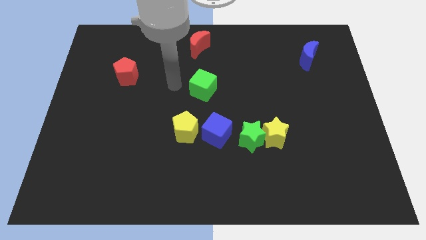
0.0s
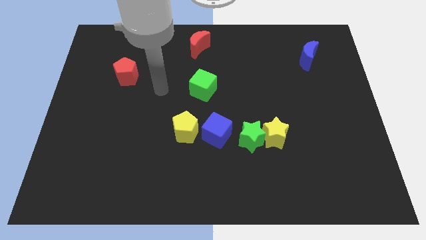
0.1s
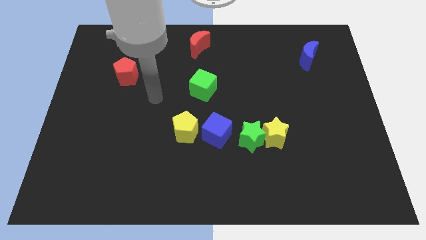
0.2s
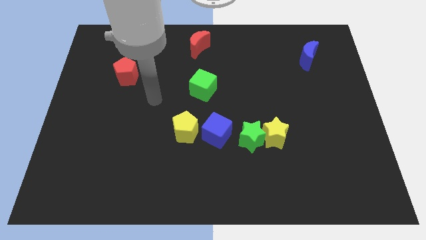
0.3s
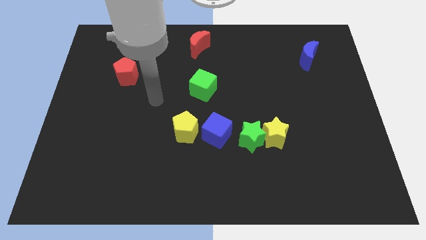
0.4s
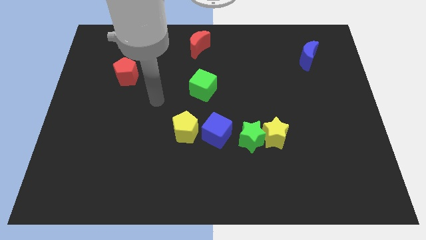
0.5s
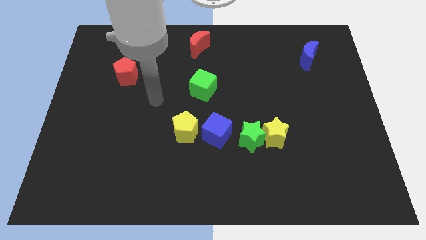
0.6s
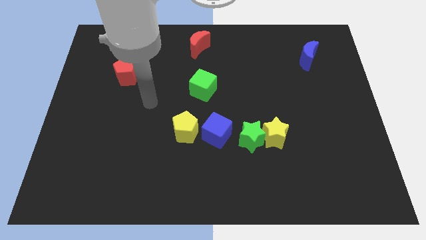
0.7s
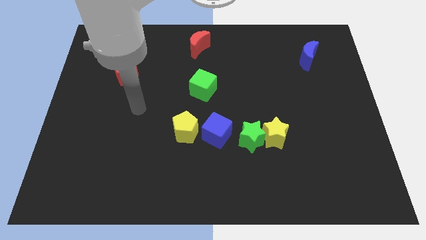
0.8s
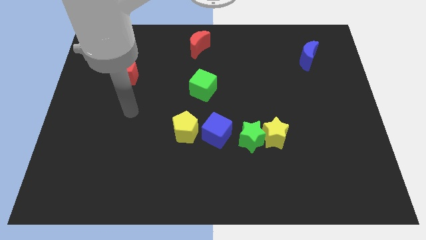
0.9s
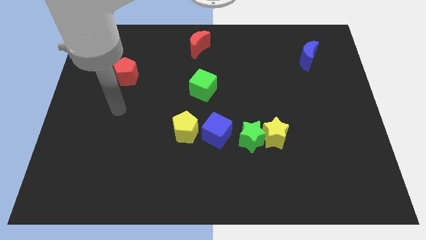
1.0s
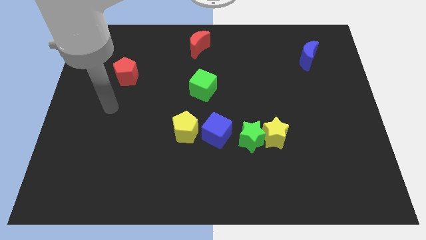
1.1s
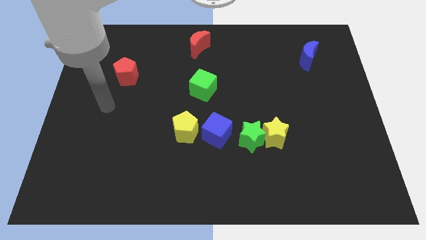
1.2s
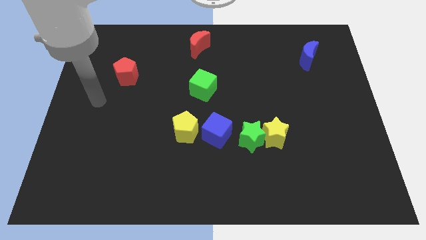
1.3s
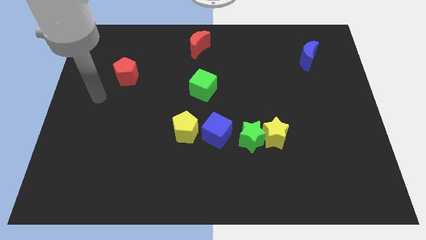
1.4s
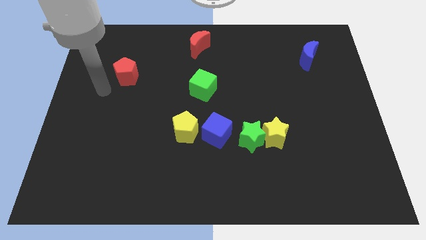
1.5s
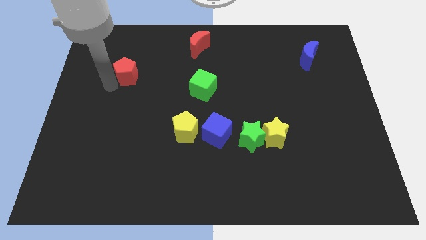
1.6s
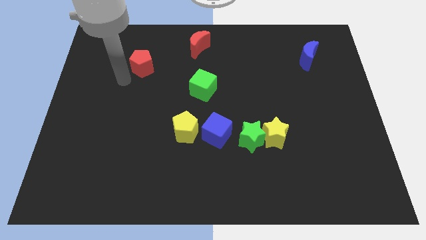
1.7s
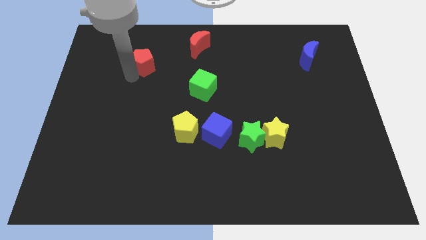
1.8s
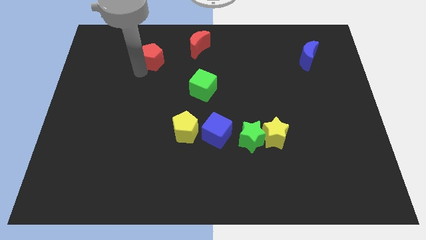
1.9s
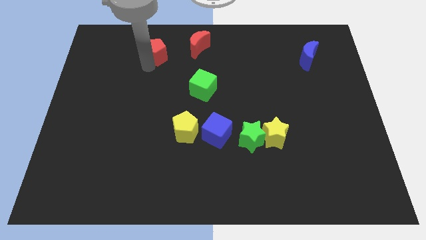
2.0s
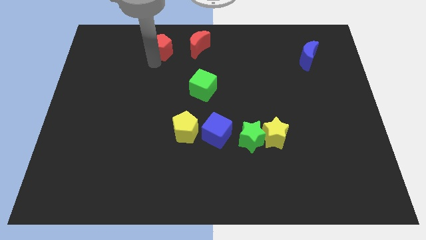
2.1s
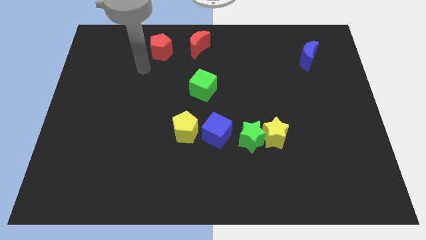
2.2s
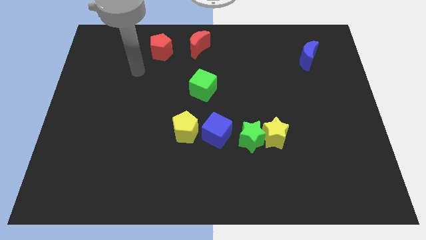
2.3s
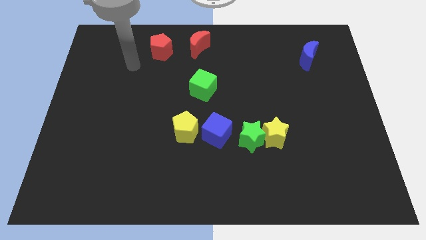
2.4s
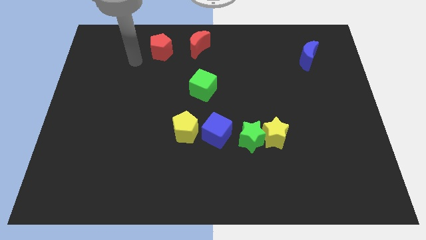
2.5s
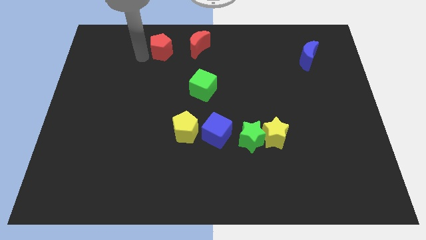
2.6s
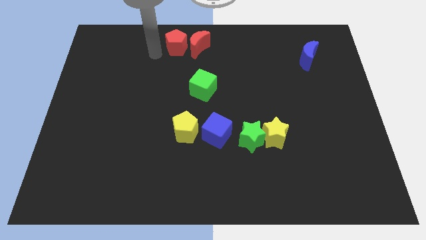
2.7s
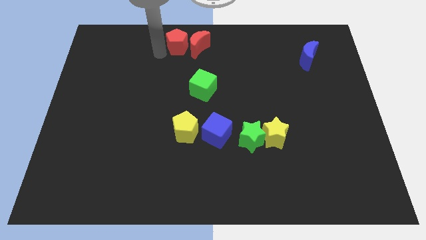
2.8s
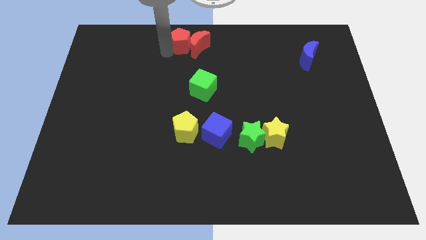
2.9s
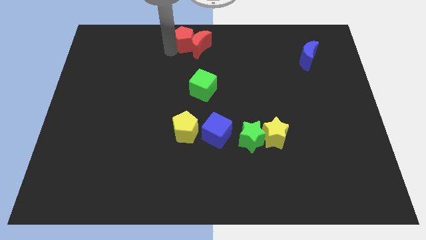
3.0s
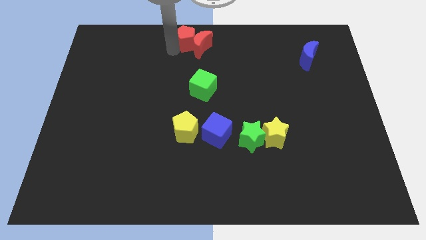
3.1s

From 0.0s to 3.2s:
move red pentagon towards red crescent

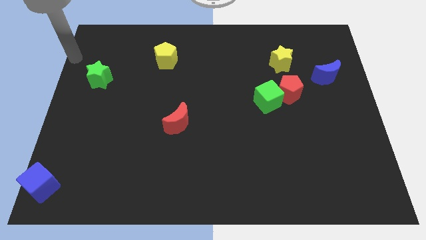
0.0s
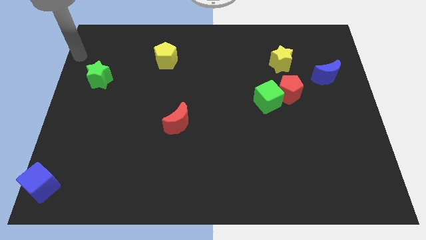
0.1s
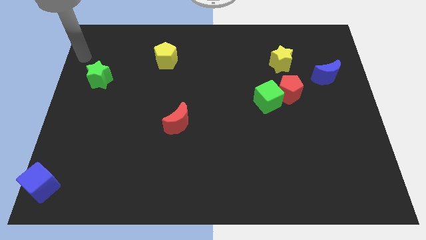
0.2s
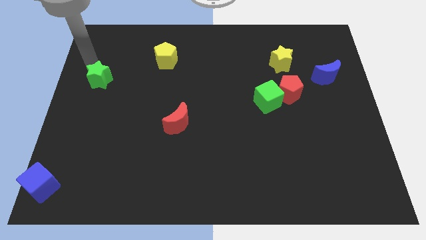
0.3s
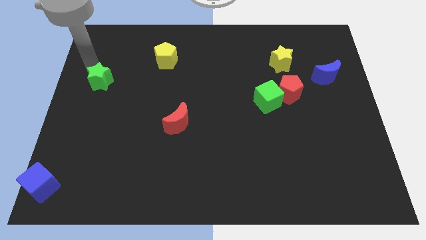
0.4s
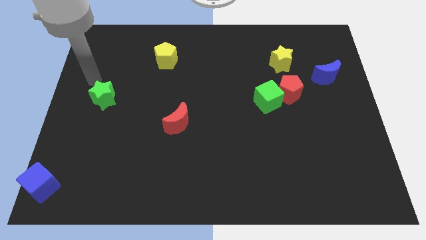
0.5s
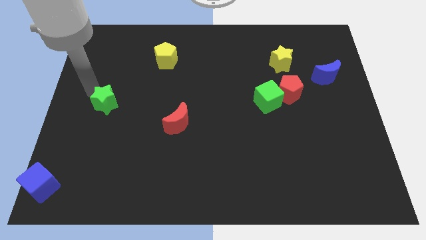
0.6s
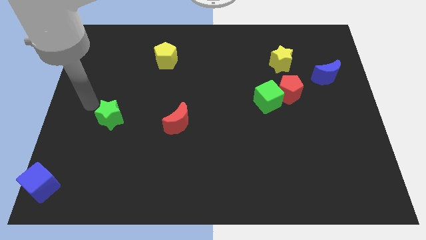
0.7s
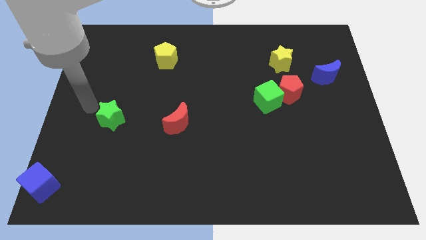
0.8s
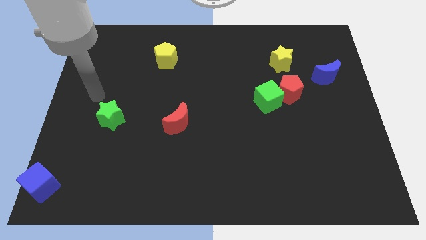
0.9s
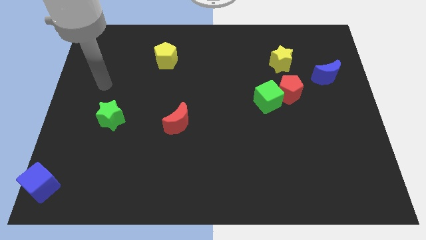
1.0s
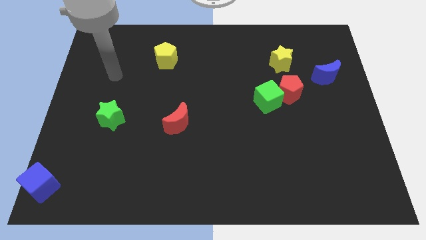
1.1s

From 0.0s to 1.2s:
push green star downwards

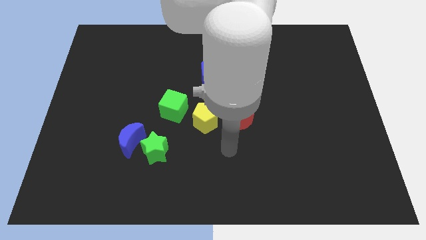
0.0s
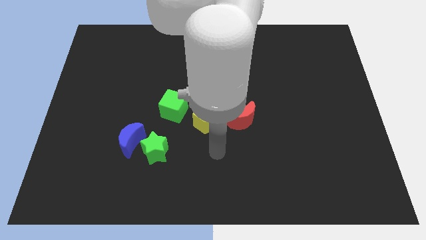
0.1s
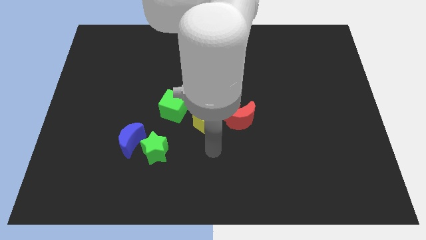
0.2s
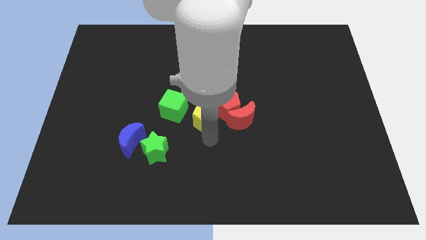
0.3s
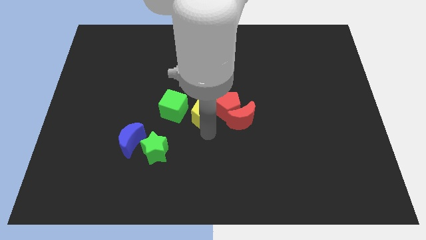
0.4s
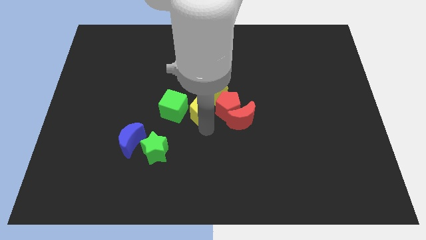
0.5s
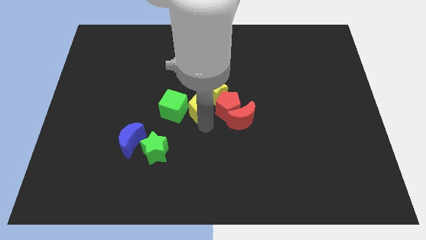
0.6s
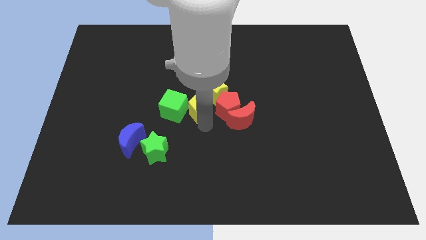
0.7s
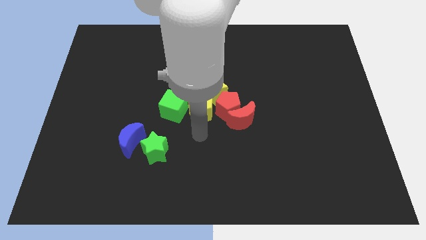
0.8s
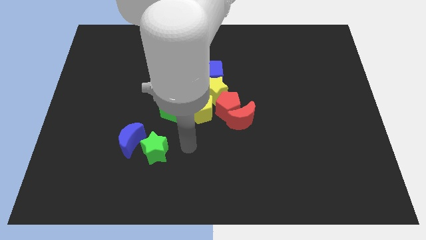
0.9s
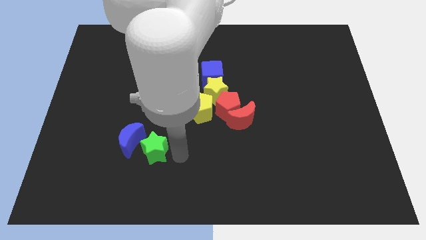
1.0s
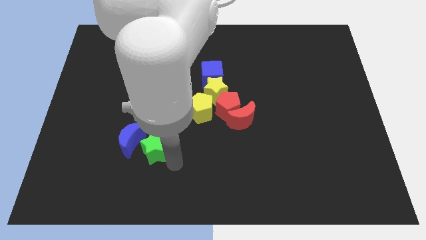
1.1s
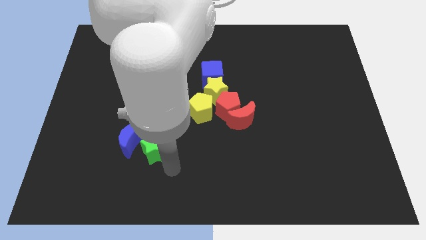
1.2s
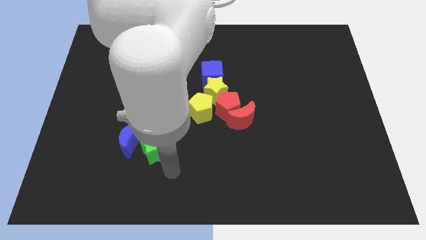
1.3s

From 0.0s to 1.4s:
push the yellow pentagon towards the yellow star

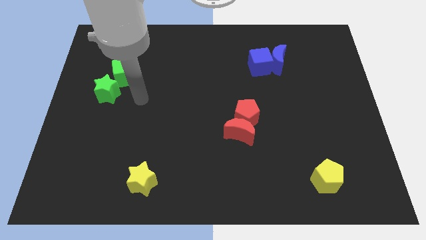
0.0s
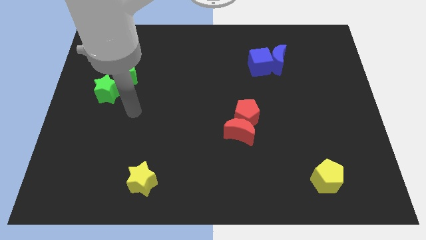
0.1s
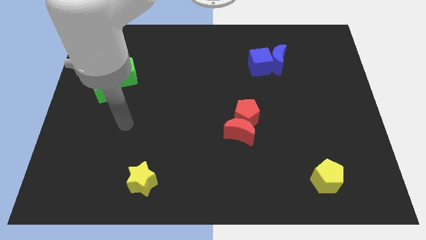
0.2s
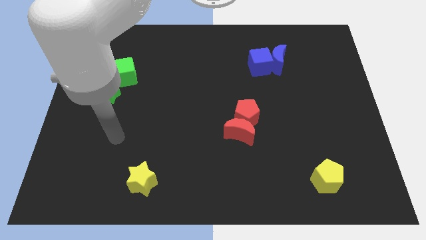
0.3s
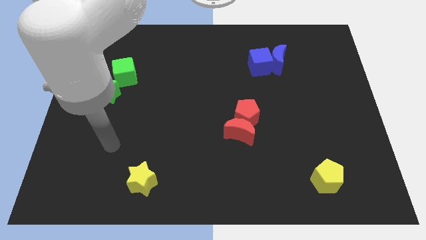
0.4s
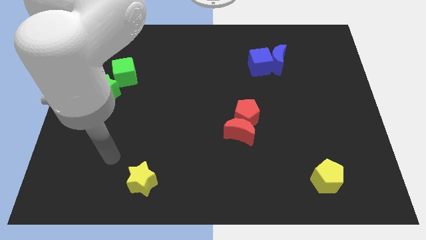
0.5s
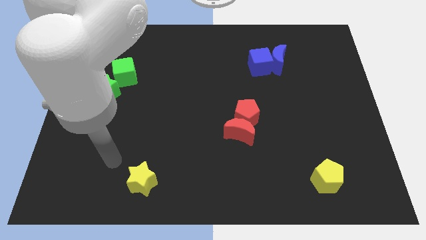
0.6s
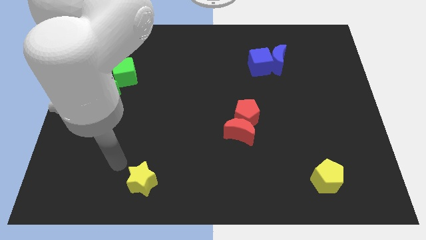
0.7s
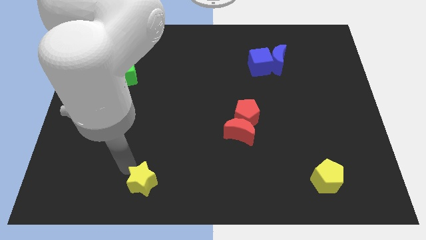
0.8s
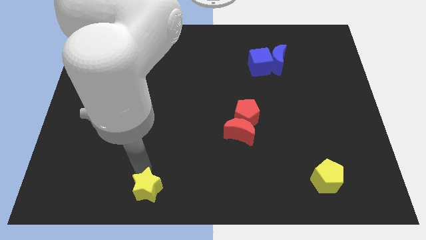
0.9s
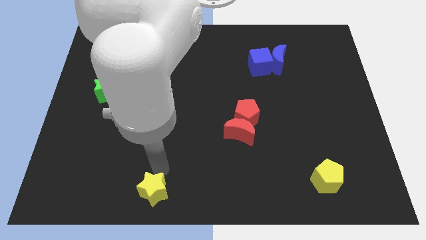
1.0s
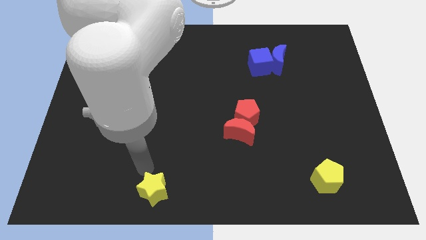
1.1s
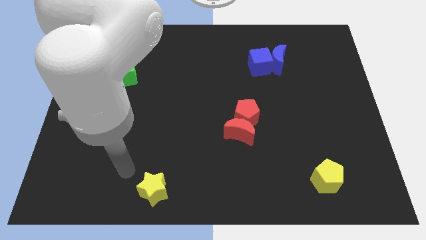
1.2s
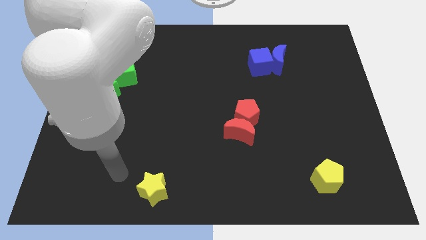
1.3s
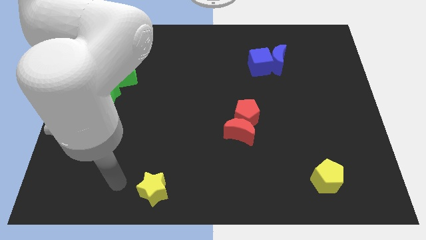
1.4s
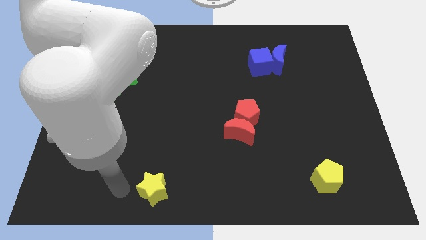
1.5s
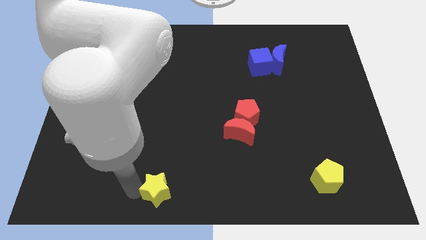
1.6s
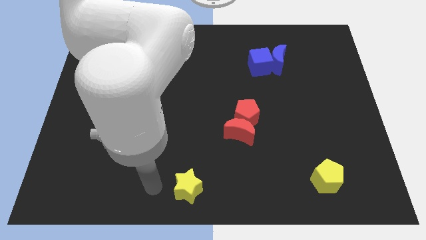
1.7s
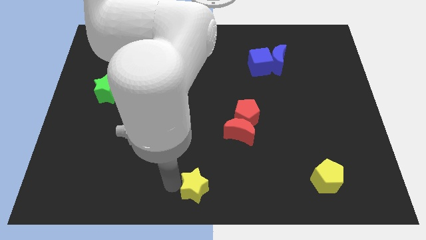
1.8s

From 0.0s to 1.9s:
move the yellow star to left of the yellow pentagon

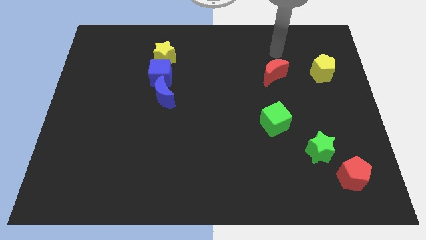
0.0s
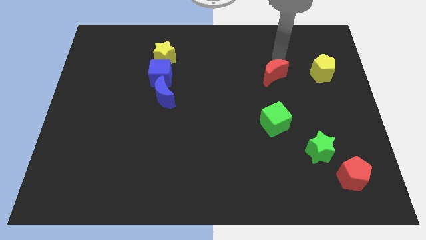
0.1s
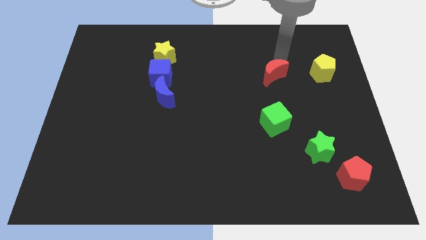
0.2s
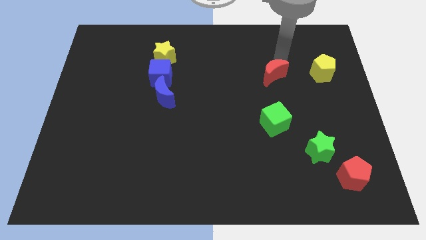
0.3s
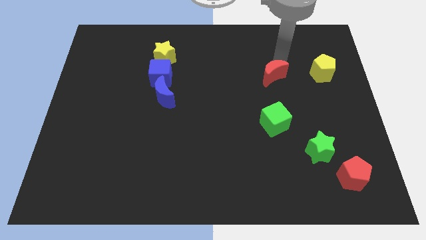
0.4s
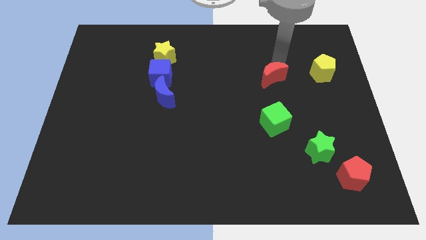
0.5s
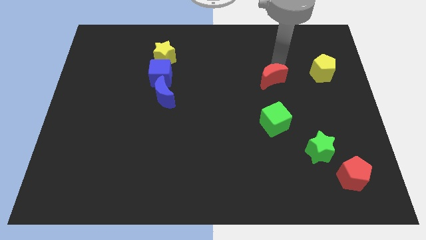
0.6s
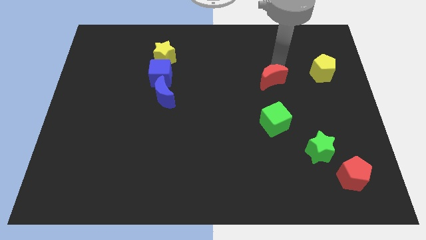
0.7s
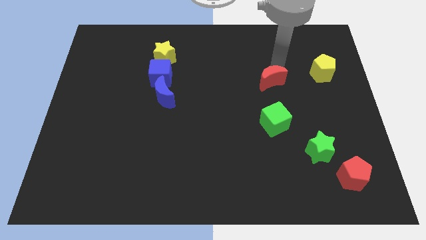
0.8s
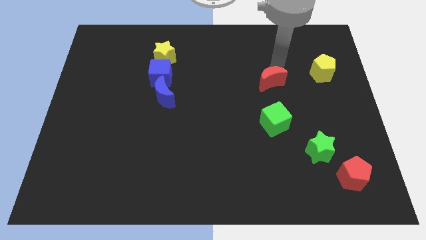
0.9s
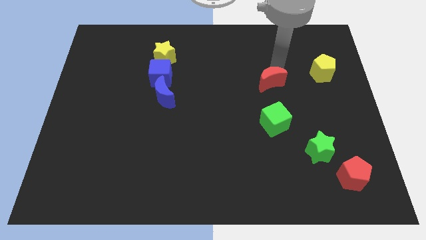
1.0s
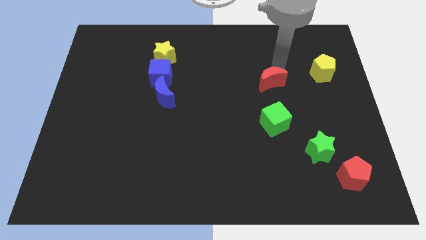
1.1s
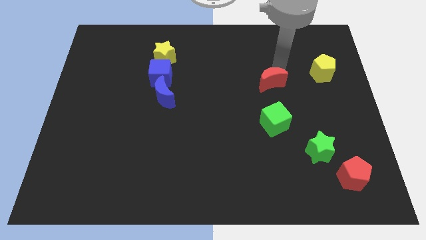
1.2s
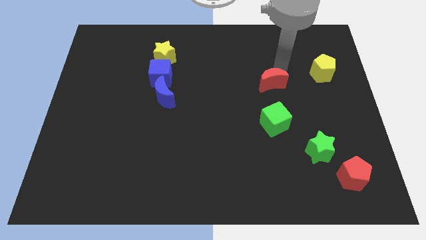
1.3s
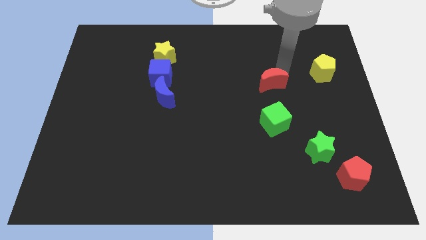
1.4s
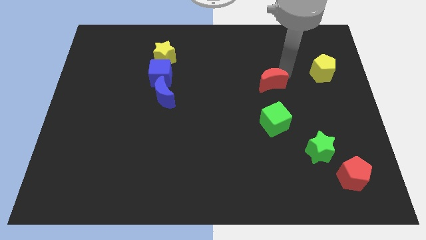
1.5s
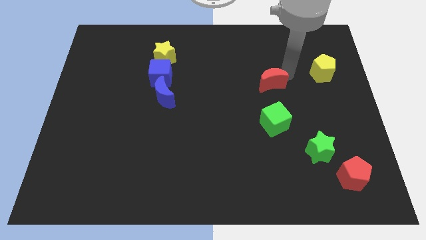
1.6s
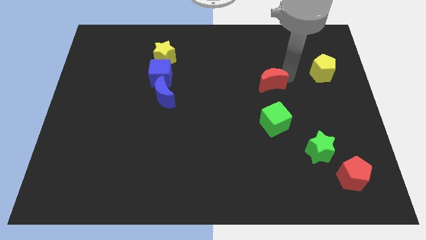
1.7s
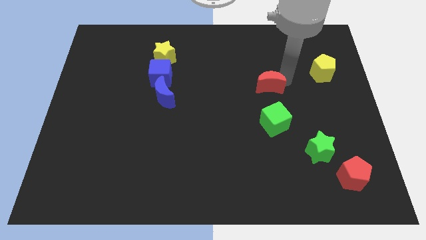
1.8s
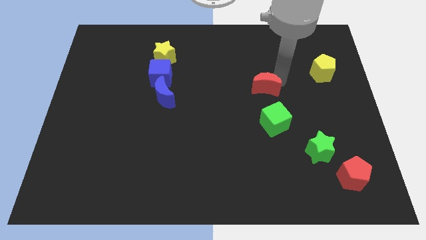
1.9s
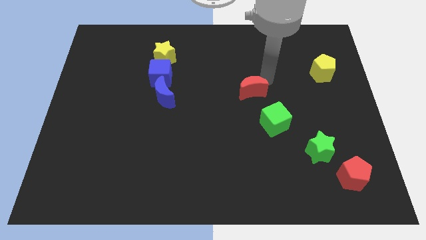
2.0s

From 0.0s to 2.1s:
place red moon parallel to blue moon
